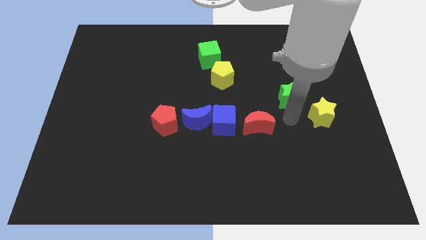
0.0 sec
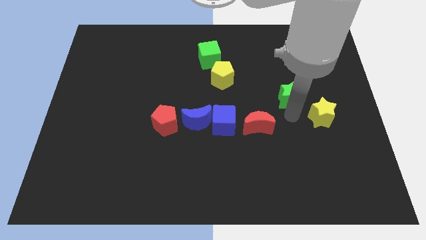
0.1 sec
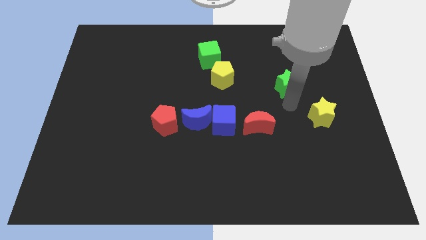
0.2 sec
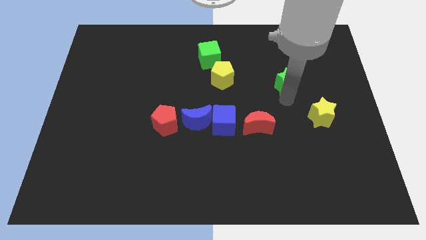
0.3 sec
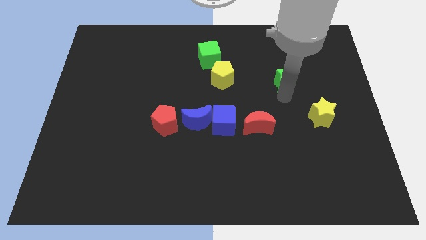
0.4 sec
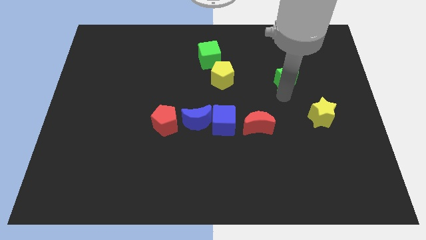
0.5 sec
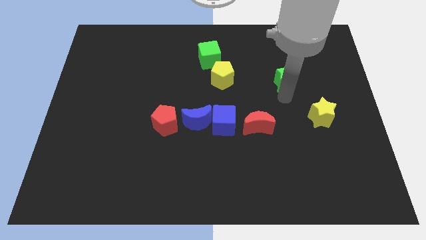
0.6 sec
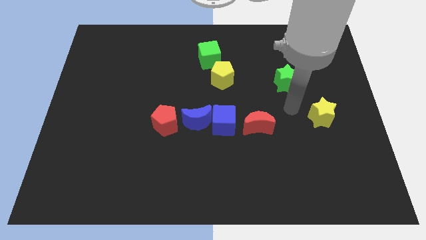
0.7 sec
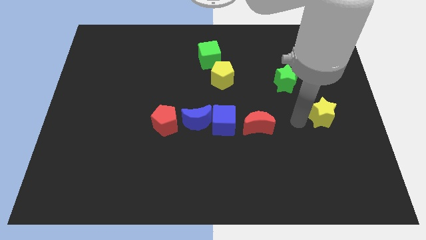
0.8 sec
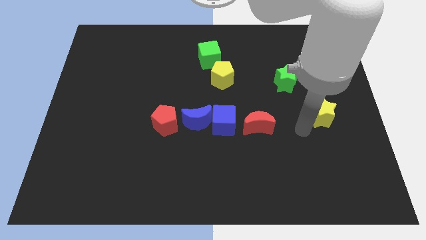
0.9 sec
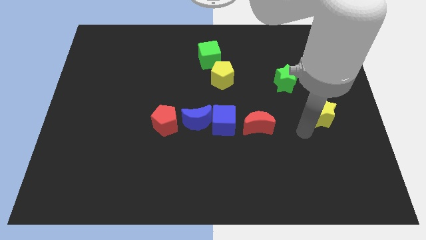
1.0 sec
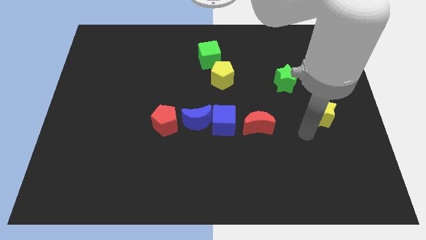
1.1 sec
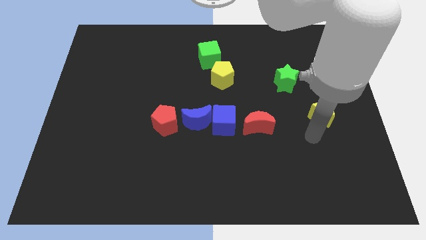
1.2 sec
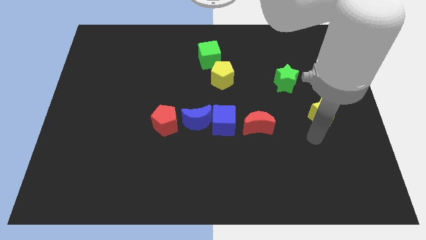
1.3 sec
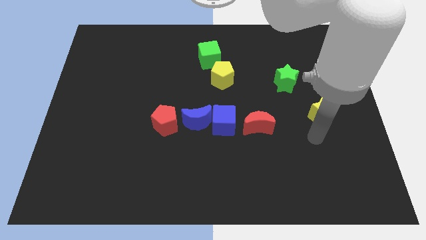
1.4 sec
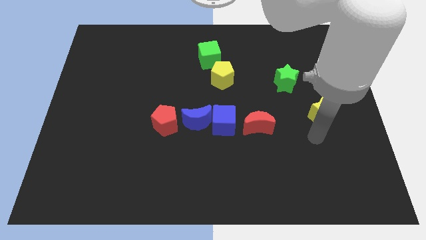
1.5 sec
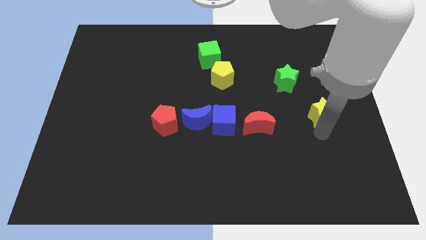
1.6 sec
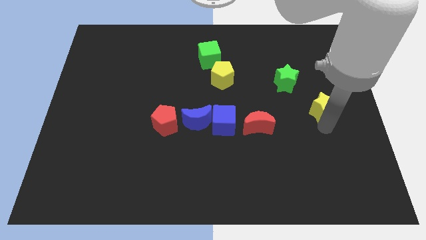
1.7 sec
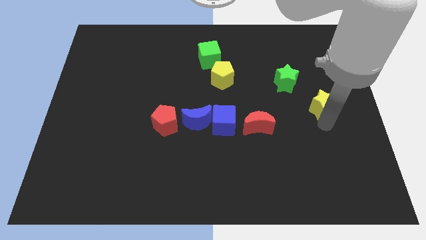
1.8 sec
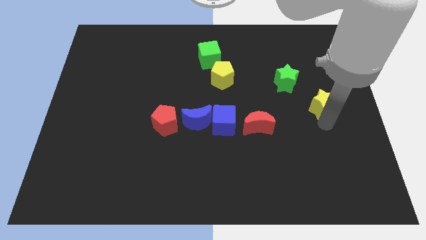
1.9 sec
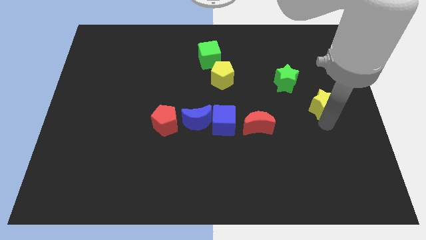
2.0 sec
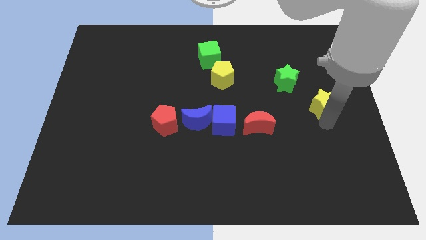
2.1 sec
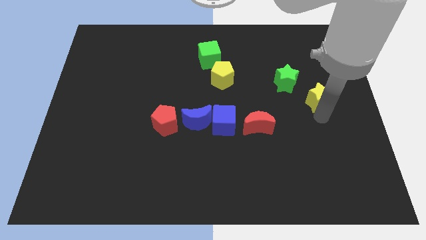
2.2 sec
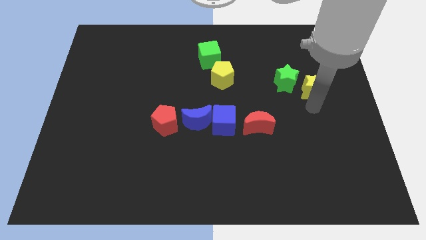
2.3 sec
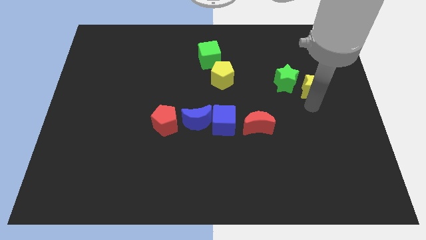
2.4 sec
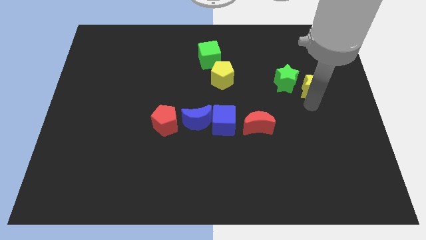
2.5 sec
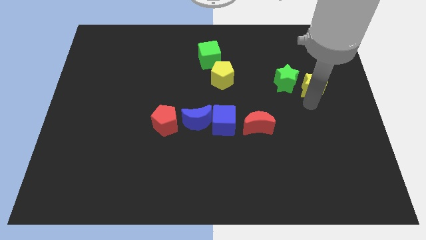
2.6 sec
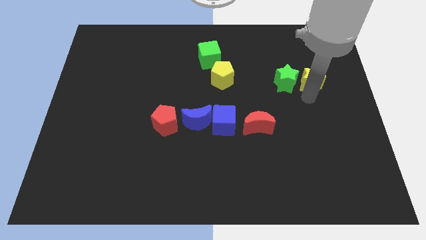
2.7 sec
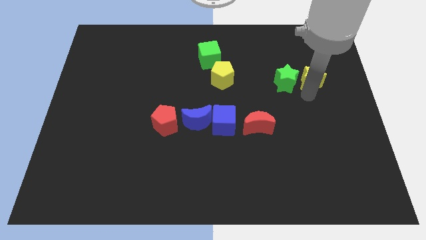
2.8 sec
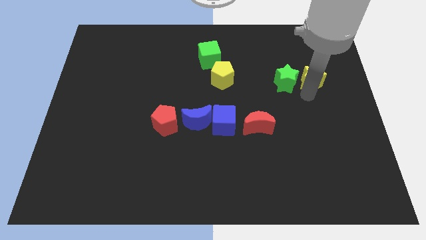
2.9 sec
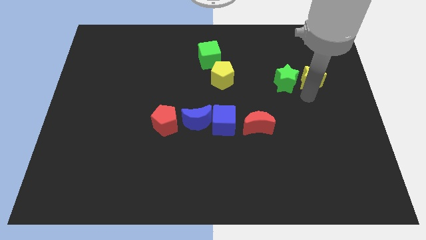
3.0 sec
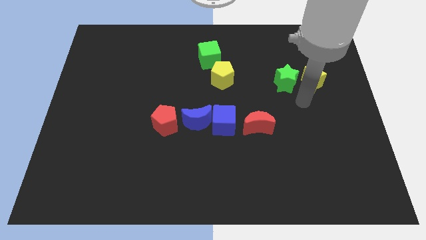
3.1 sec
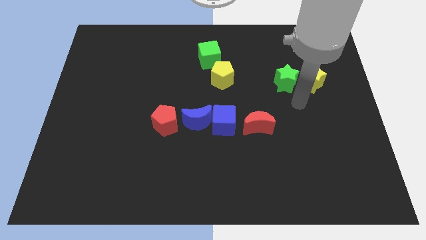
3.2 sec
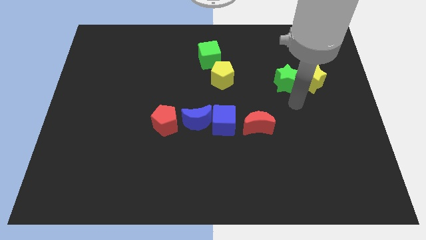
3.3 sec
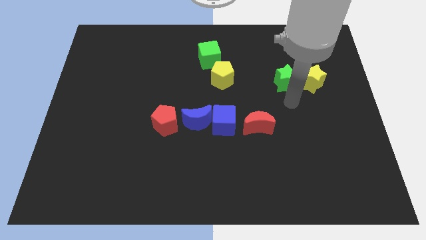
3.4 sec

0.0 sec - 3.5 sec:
place yellow star beside green star

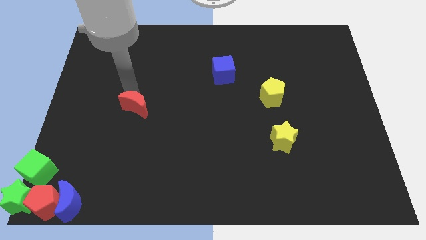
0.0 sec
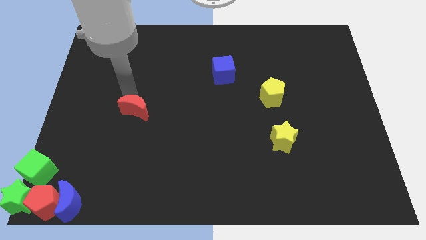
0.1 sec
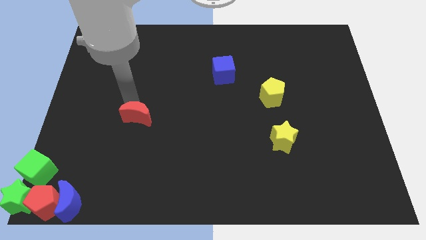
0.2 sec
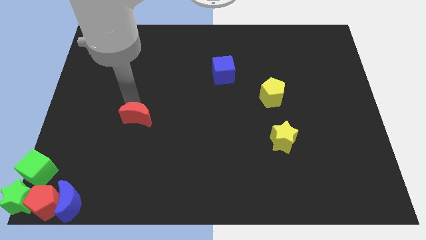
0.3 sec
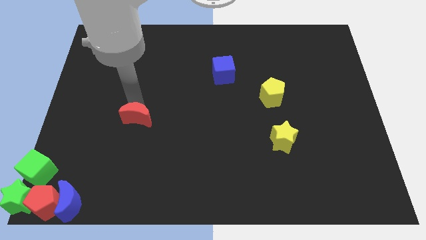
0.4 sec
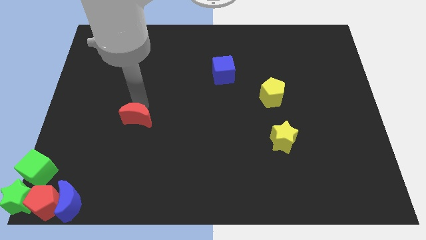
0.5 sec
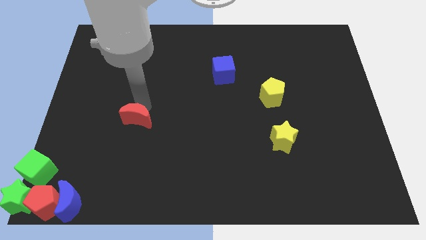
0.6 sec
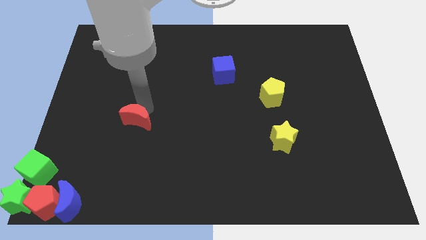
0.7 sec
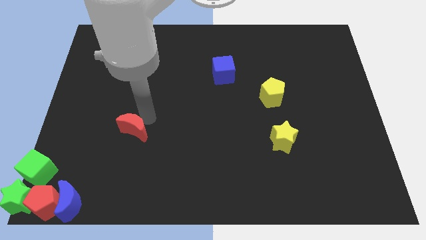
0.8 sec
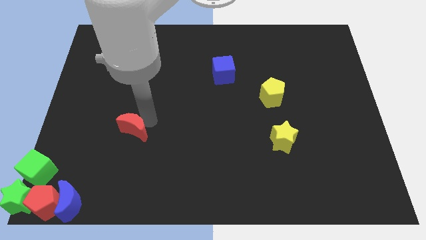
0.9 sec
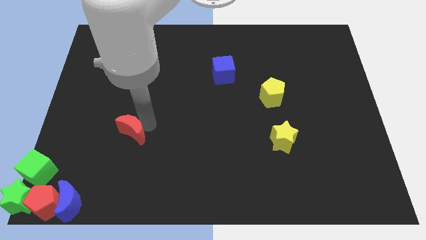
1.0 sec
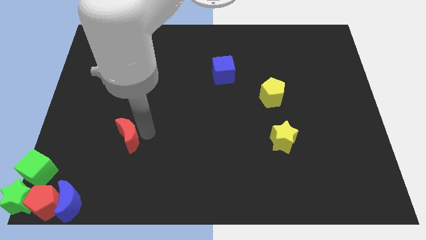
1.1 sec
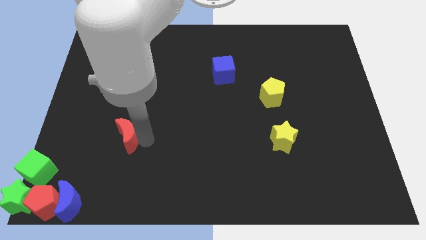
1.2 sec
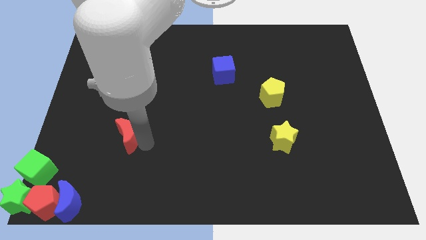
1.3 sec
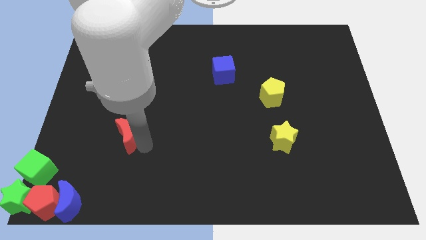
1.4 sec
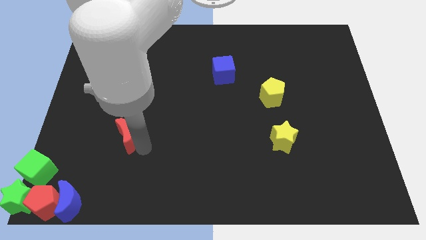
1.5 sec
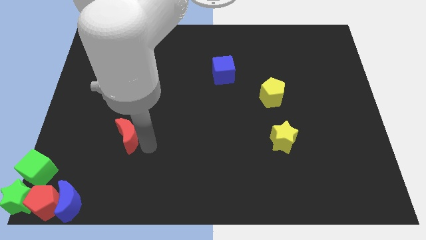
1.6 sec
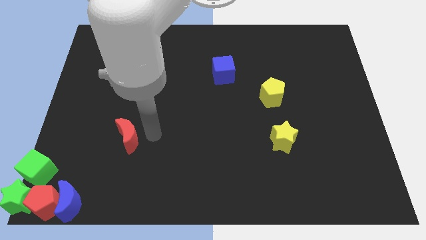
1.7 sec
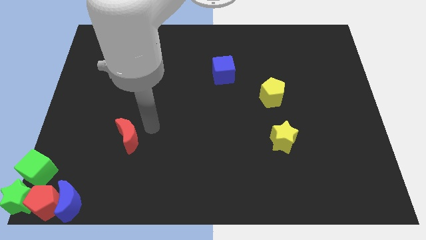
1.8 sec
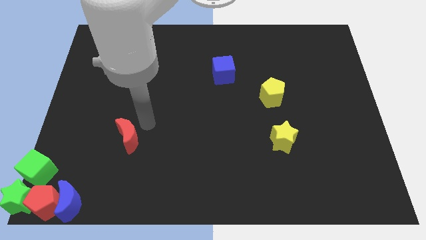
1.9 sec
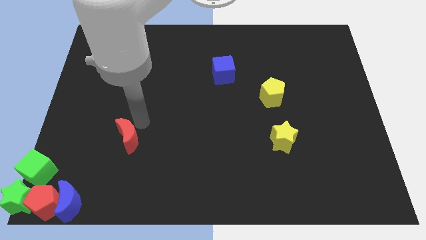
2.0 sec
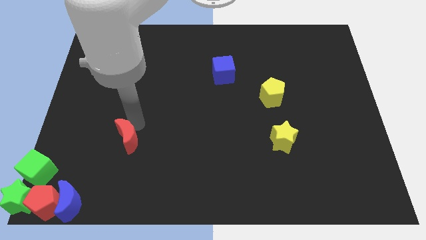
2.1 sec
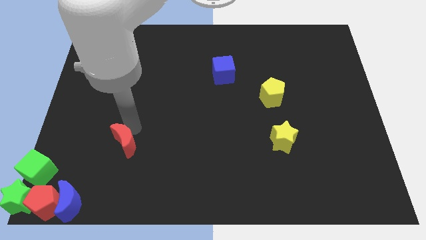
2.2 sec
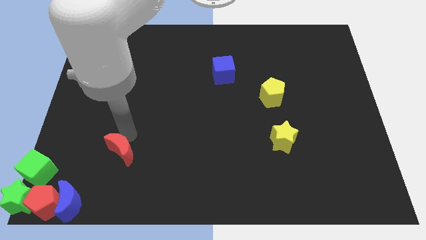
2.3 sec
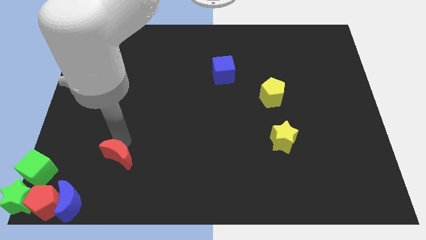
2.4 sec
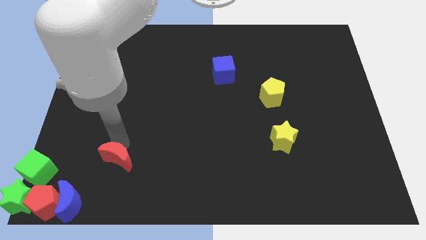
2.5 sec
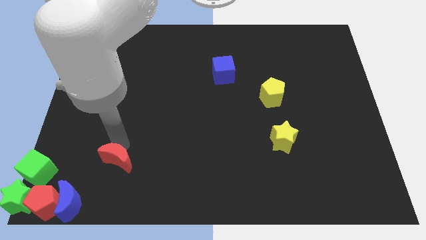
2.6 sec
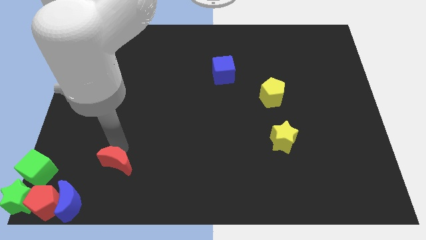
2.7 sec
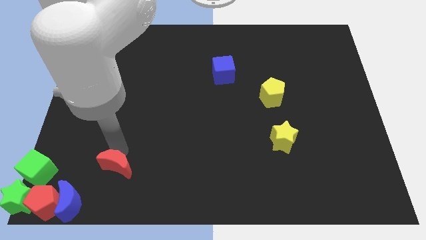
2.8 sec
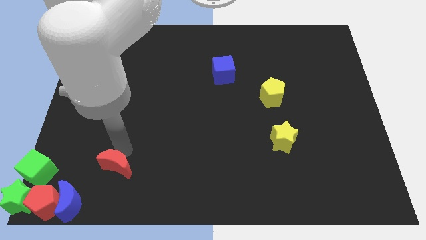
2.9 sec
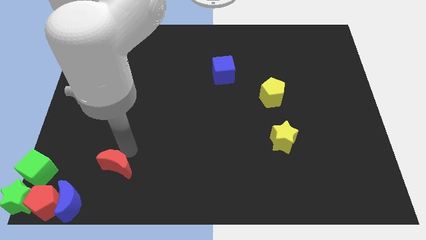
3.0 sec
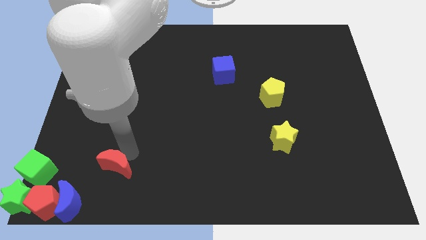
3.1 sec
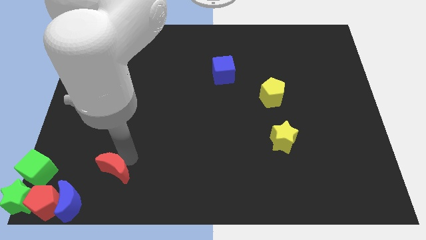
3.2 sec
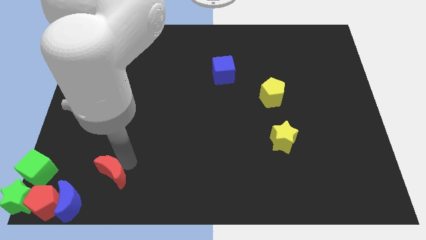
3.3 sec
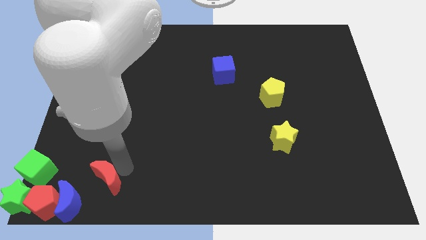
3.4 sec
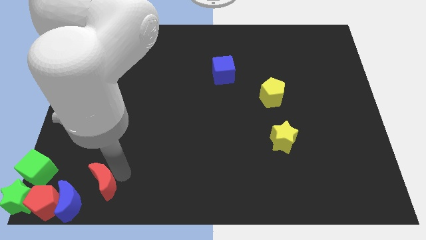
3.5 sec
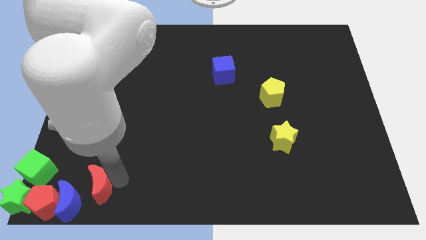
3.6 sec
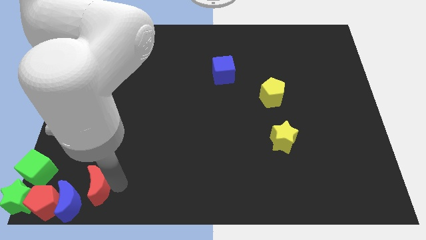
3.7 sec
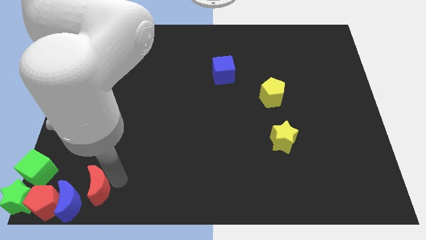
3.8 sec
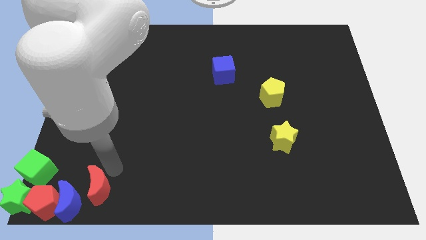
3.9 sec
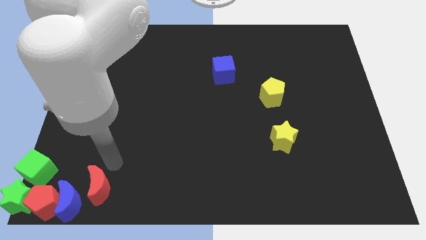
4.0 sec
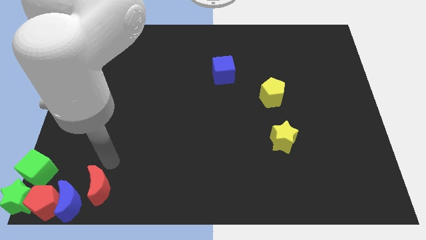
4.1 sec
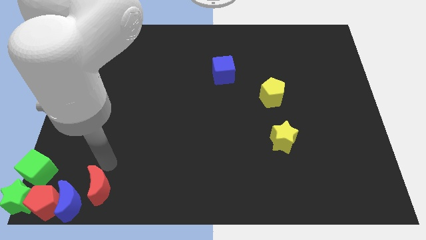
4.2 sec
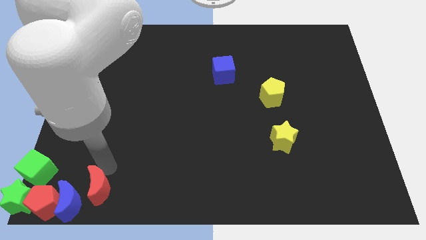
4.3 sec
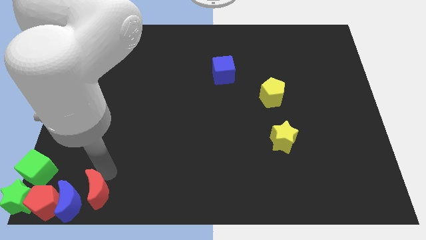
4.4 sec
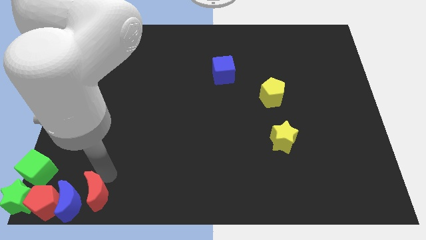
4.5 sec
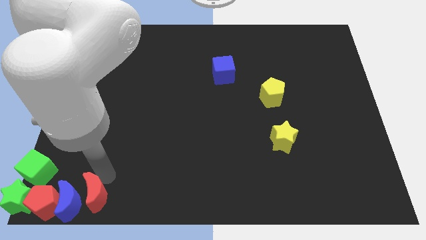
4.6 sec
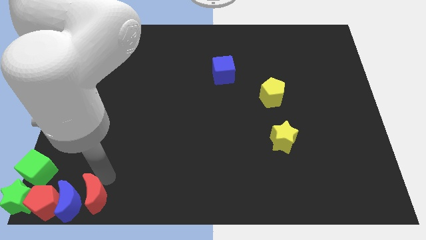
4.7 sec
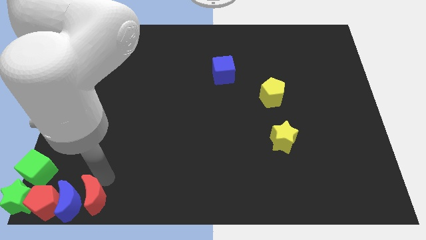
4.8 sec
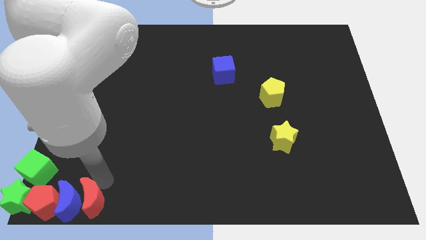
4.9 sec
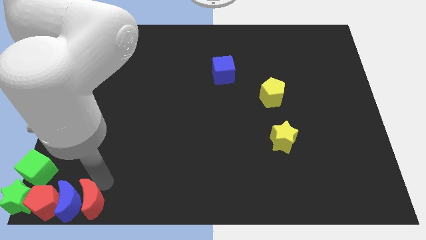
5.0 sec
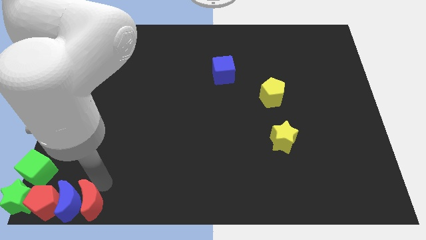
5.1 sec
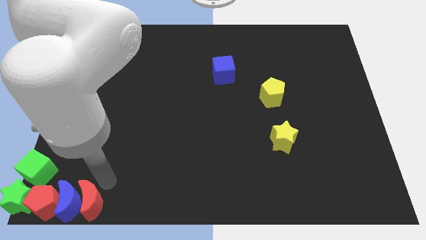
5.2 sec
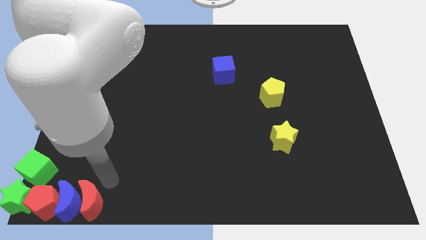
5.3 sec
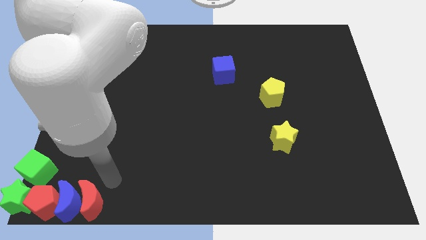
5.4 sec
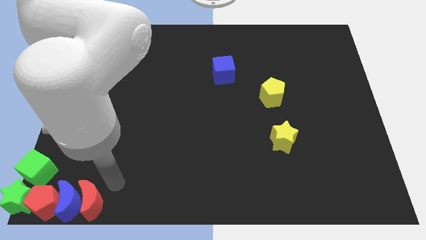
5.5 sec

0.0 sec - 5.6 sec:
place the red moon right to the blue moon
